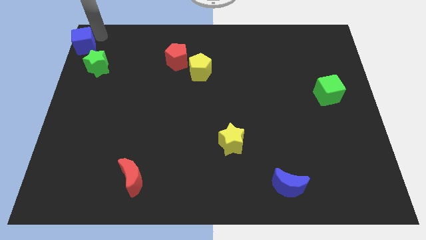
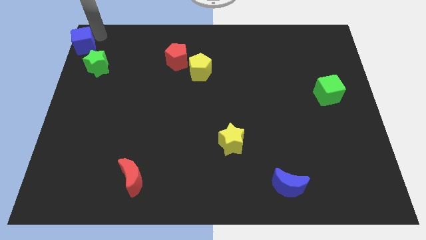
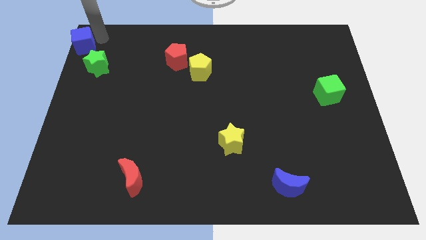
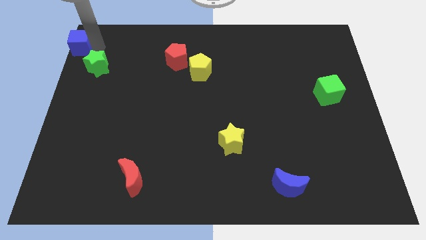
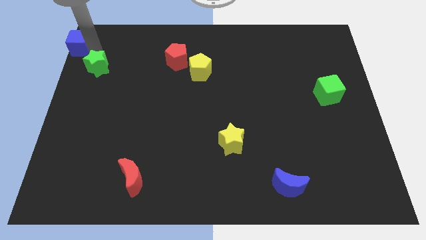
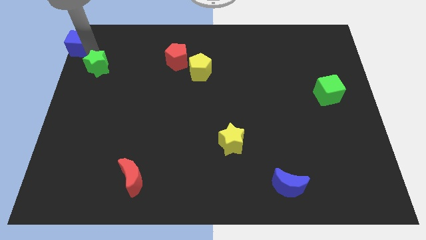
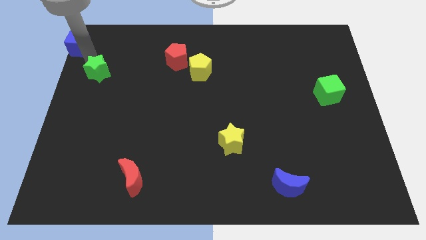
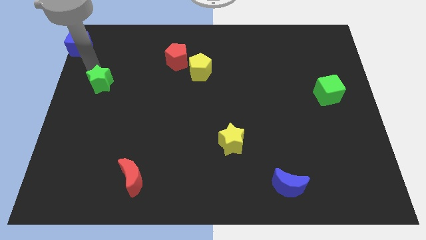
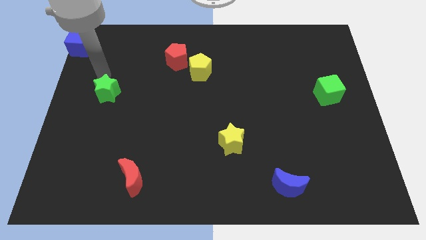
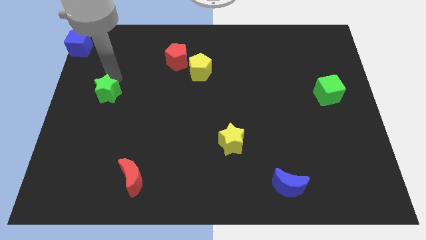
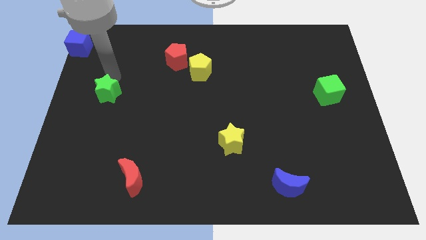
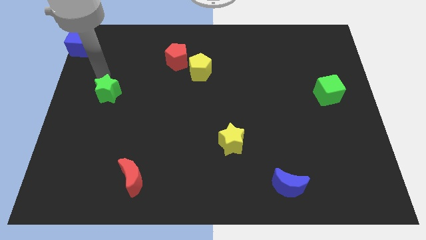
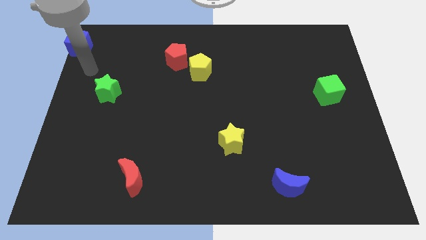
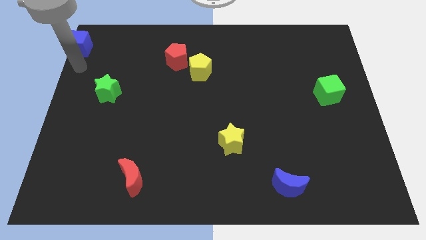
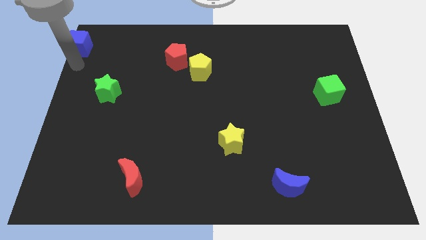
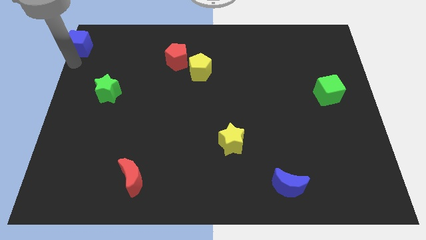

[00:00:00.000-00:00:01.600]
move green star away from blue cube

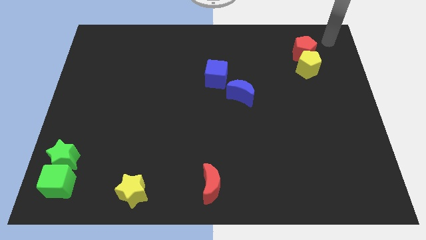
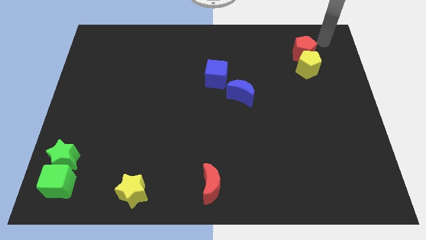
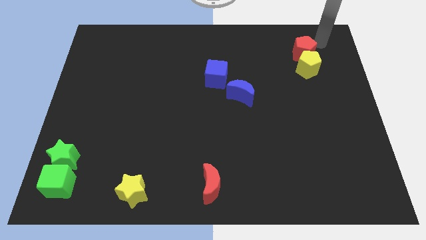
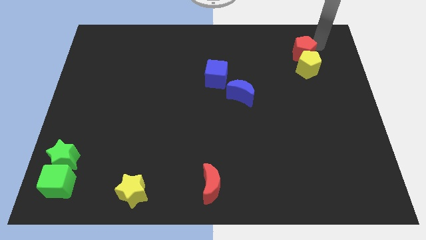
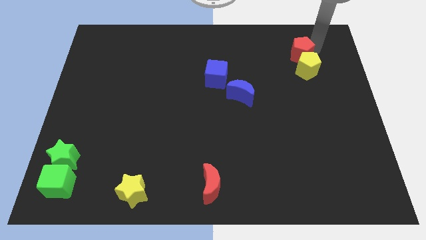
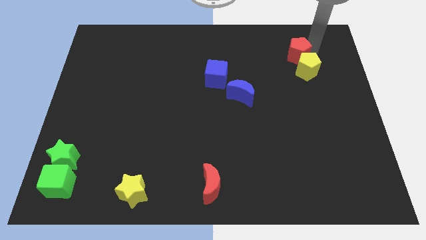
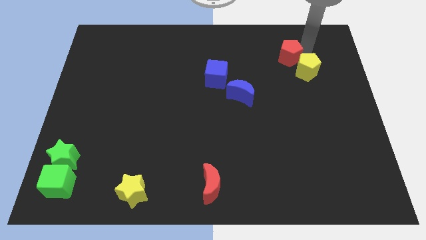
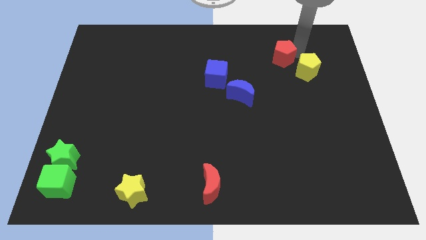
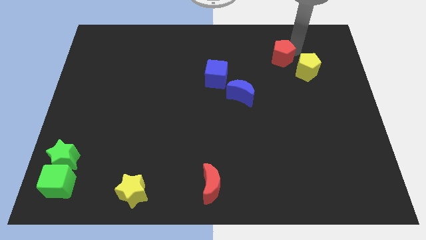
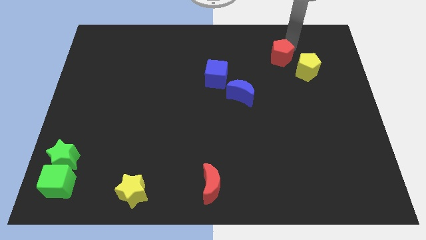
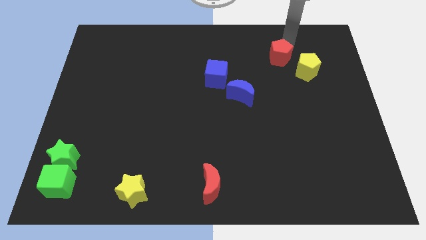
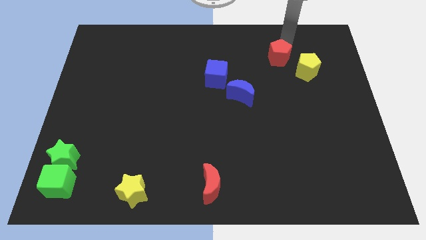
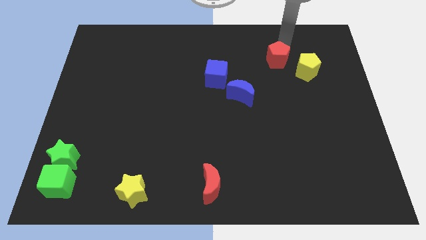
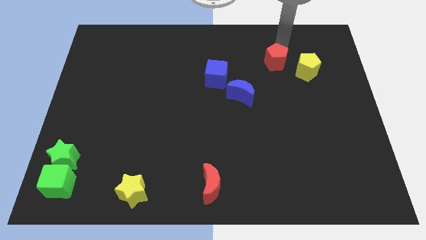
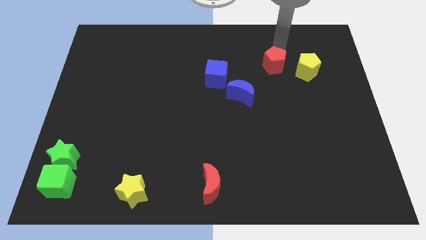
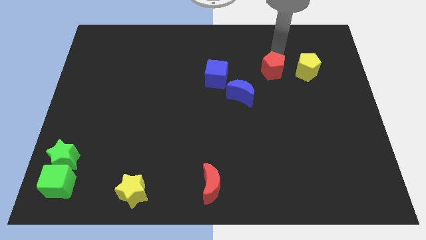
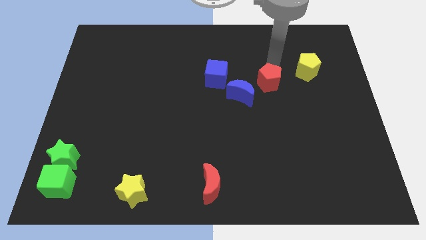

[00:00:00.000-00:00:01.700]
slide the red pentagon slightly towards the blue moon

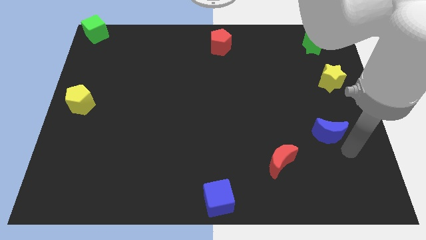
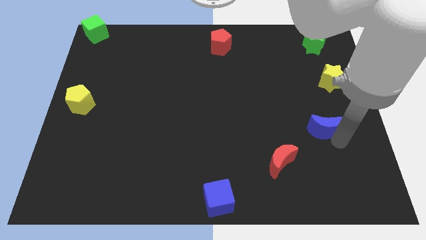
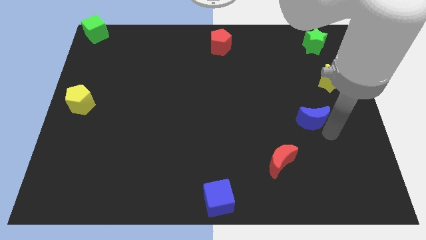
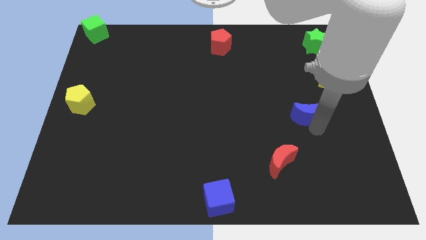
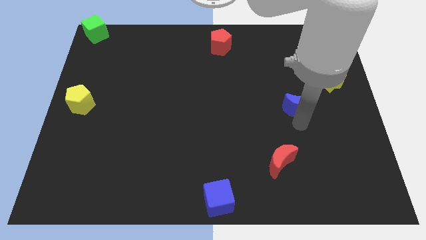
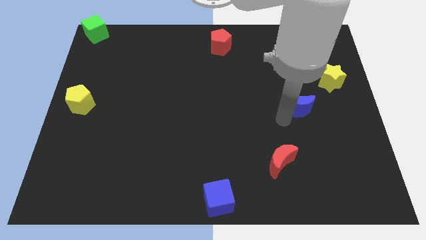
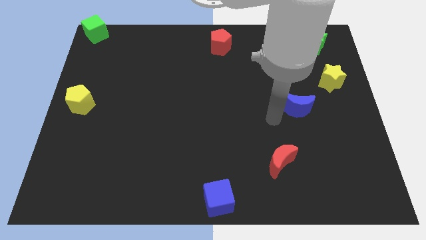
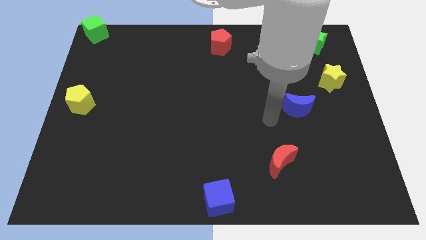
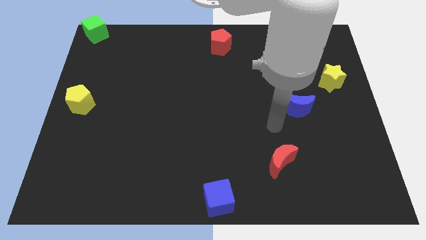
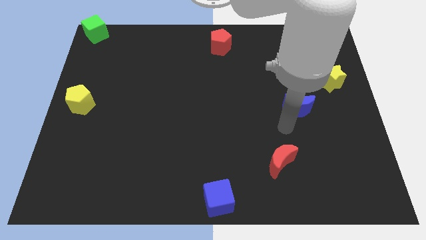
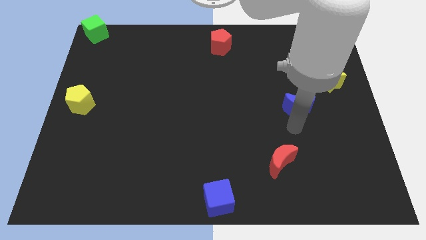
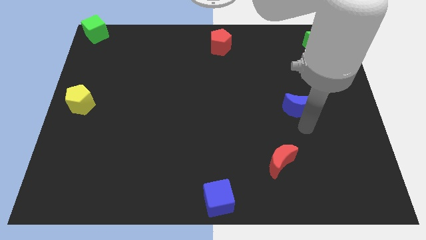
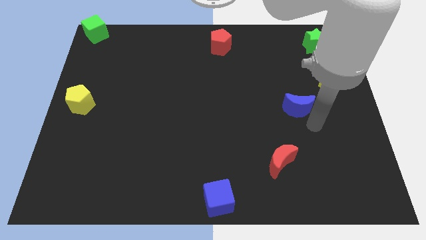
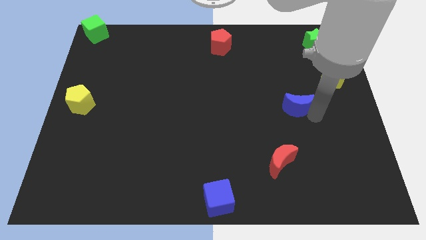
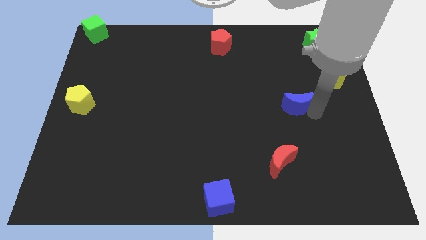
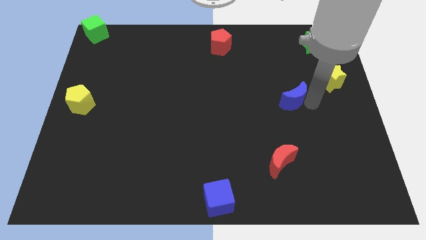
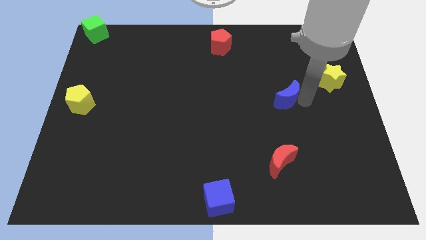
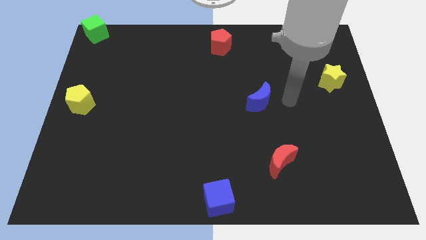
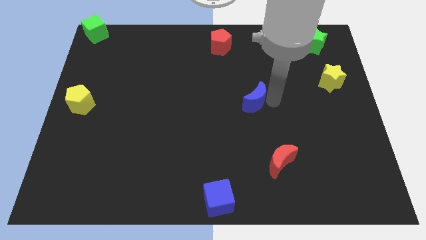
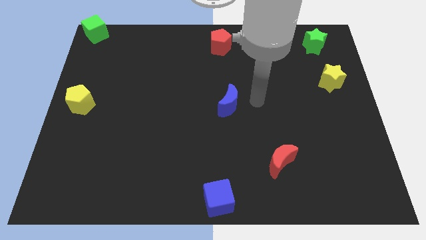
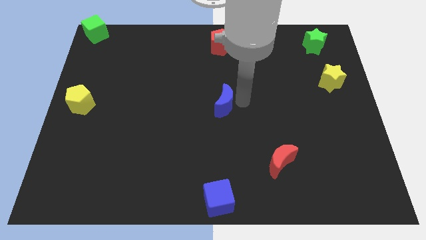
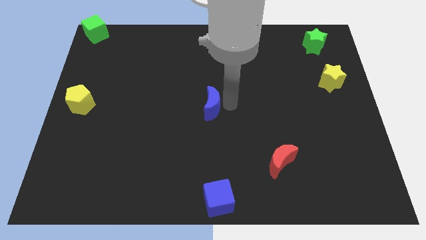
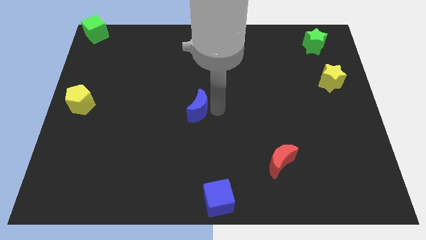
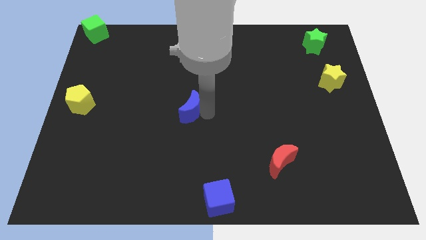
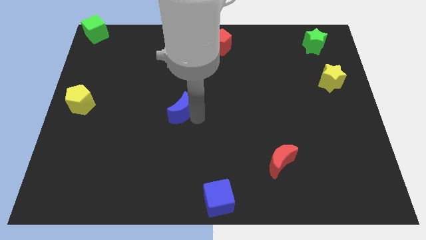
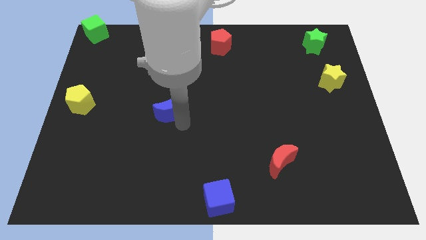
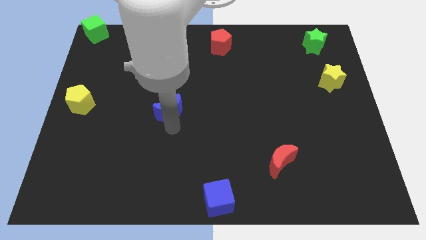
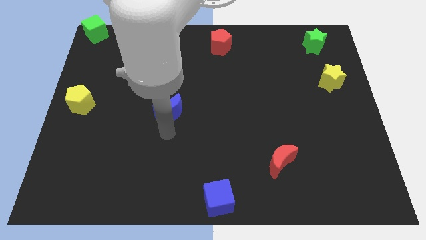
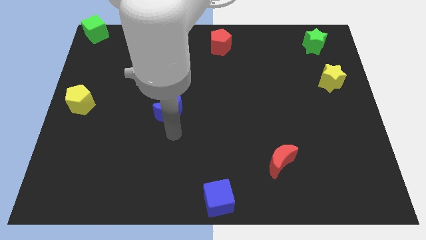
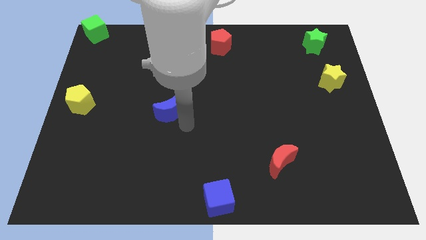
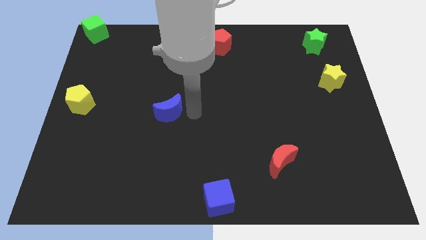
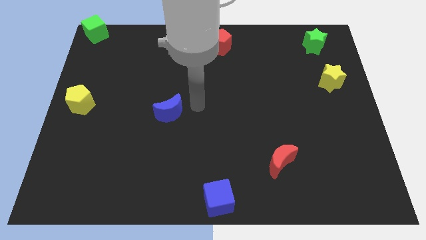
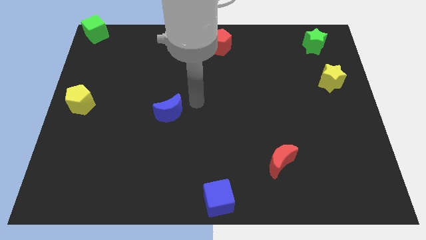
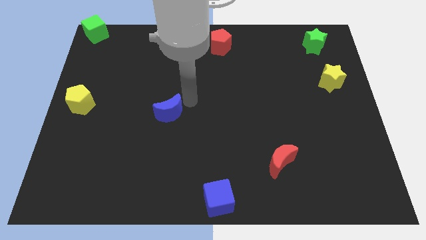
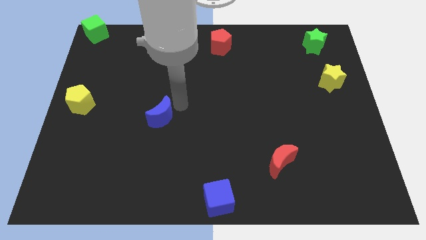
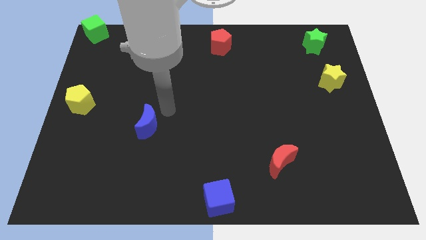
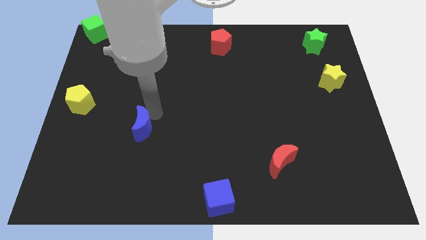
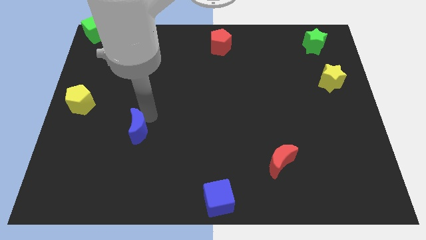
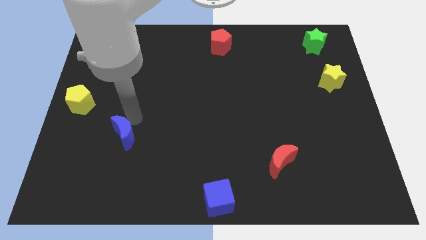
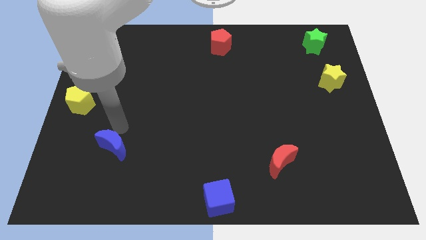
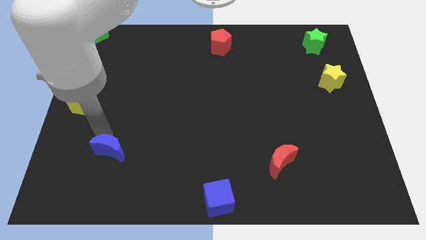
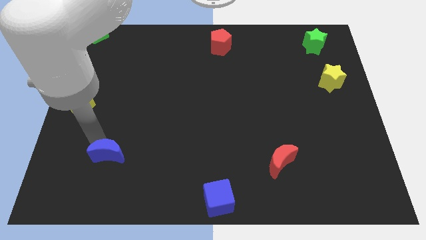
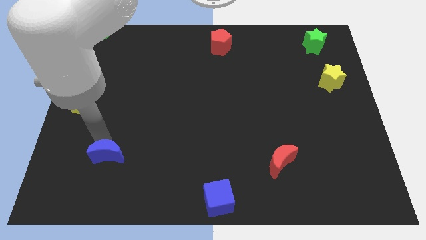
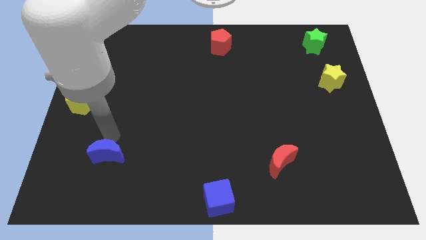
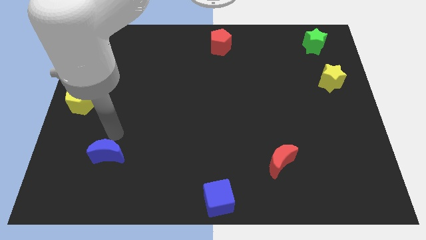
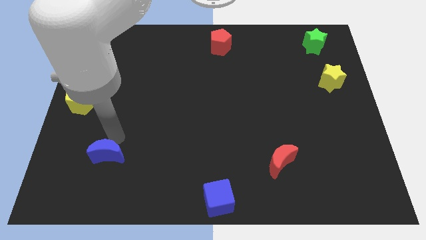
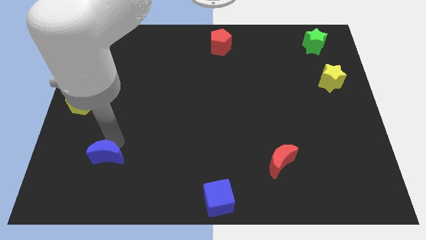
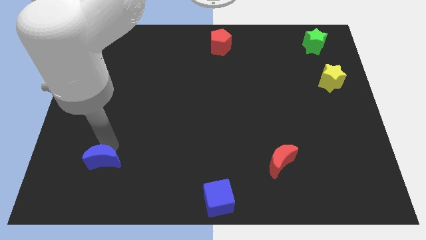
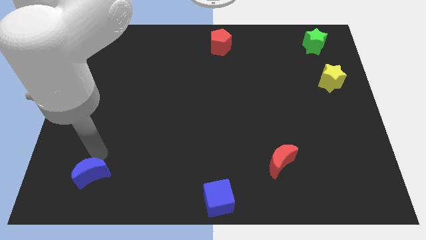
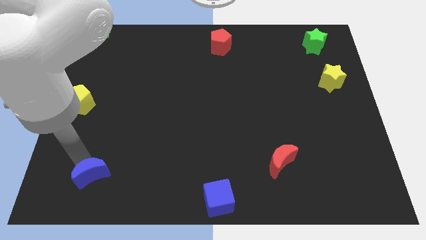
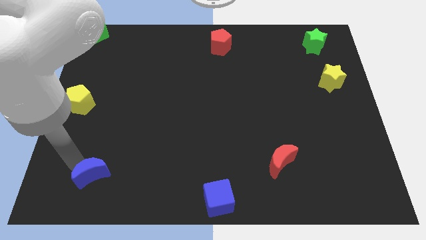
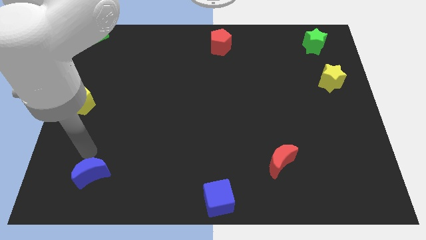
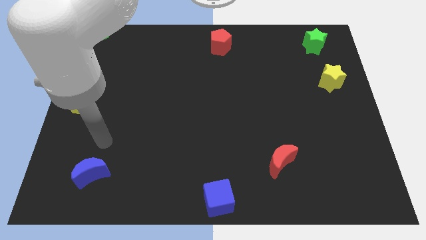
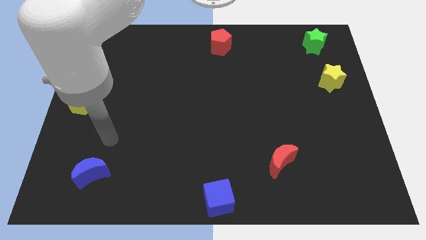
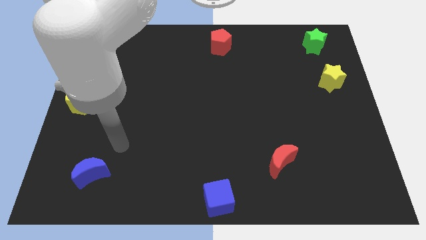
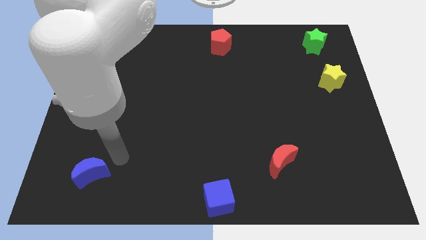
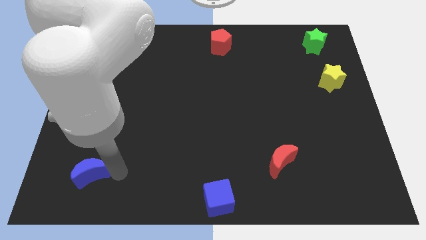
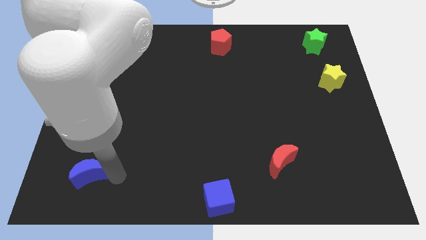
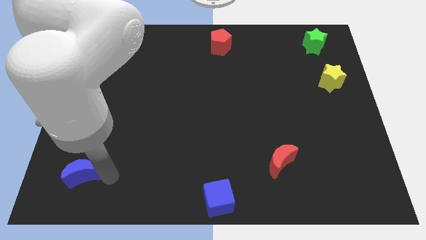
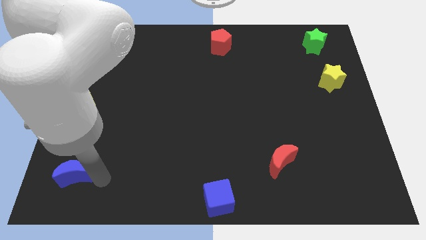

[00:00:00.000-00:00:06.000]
move the blue crescent towards the bottom left corner of the board
